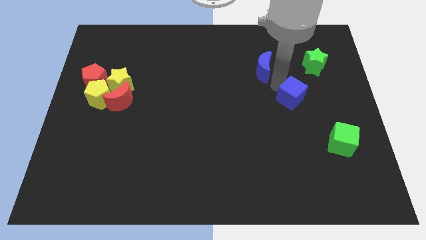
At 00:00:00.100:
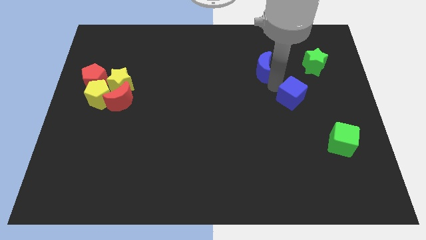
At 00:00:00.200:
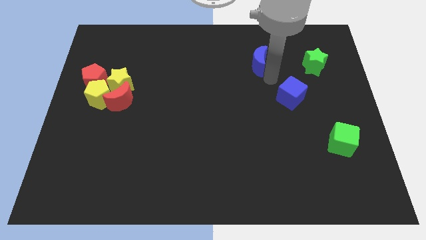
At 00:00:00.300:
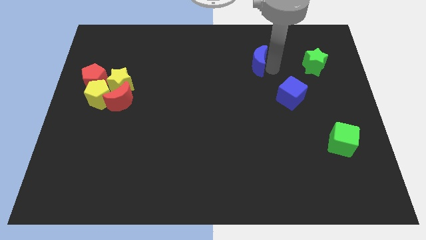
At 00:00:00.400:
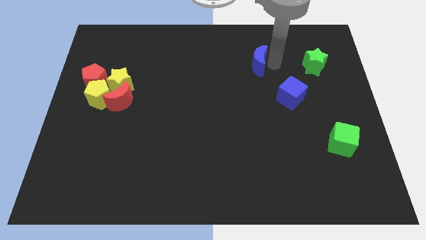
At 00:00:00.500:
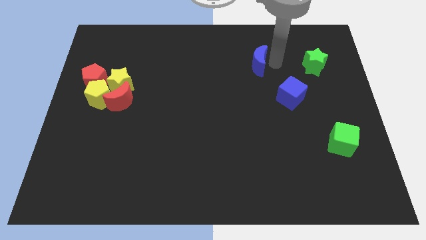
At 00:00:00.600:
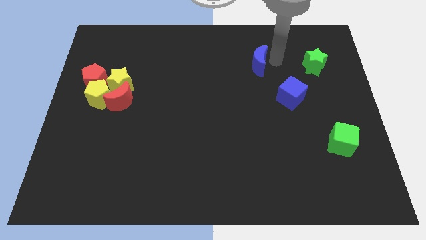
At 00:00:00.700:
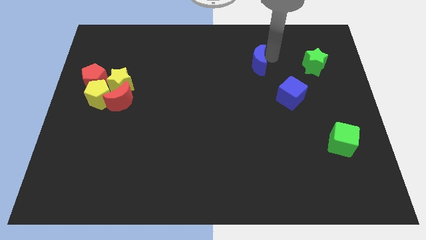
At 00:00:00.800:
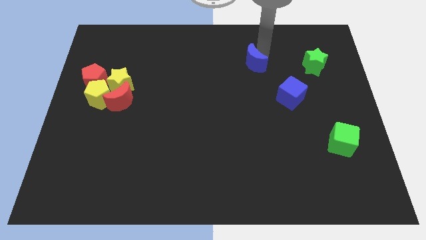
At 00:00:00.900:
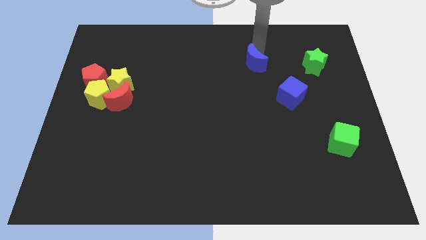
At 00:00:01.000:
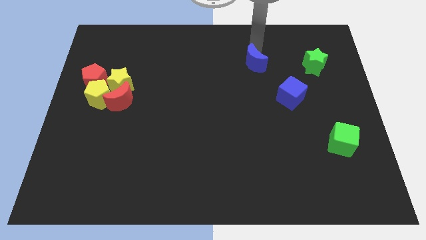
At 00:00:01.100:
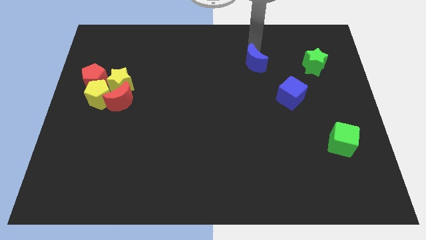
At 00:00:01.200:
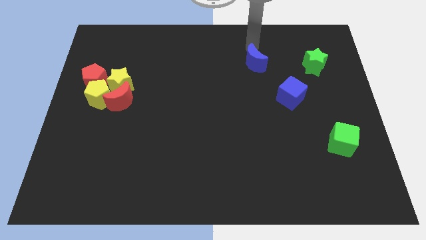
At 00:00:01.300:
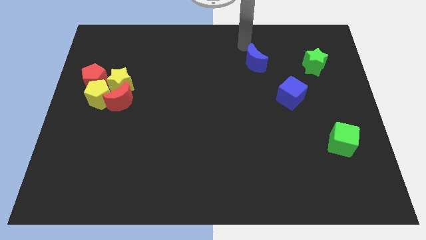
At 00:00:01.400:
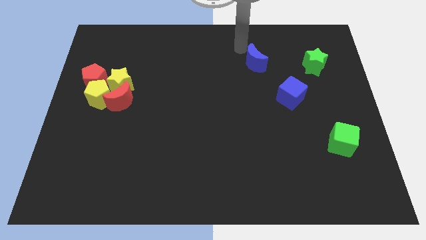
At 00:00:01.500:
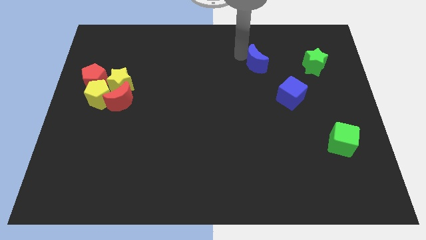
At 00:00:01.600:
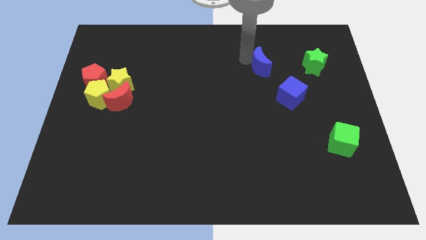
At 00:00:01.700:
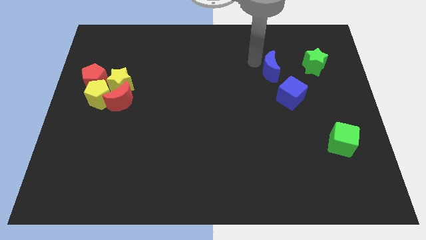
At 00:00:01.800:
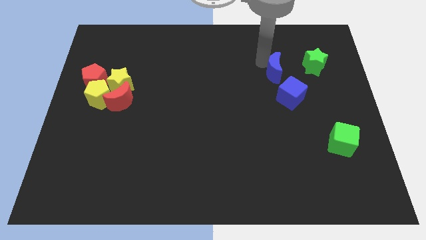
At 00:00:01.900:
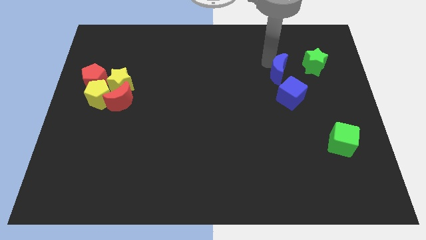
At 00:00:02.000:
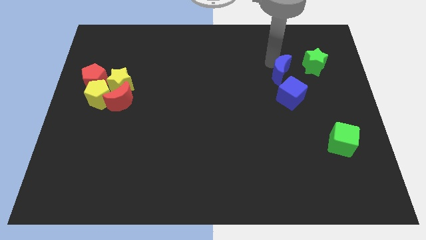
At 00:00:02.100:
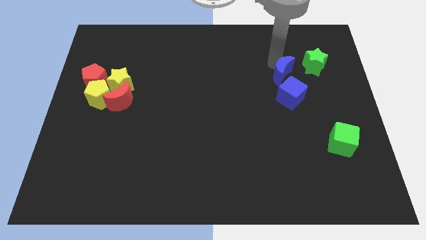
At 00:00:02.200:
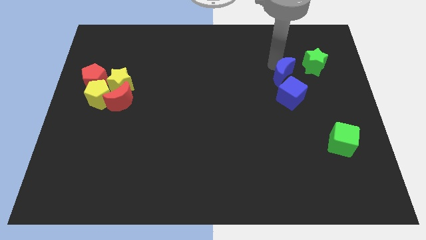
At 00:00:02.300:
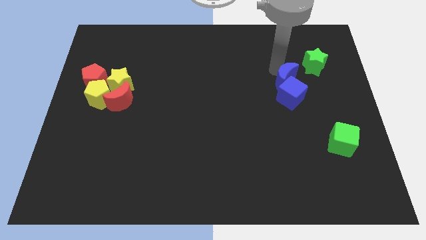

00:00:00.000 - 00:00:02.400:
move blue moon into the blue cube

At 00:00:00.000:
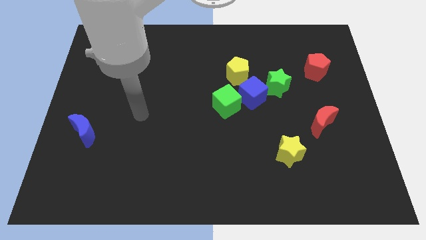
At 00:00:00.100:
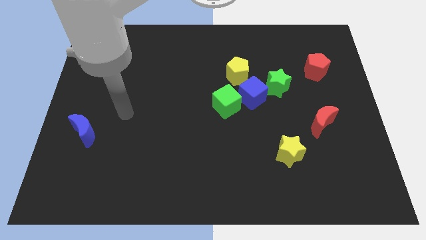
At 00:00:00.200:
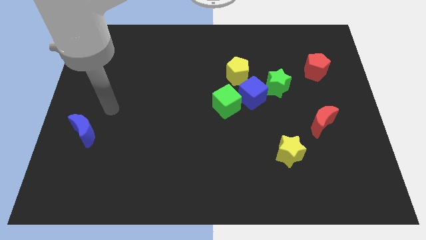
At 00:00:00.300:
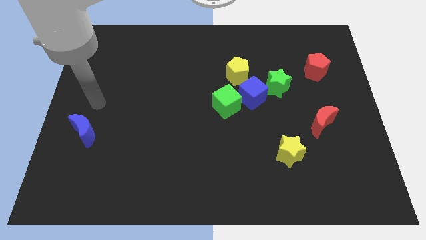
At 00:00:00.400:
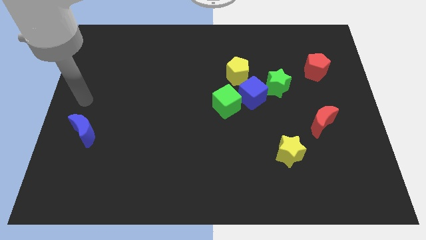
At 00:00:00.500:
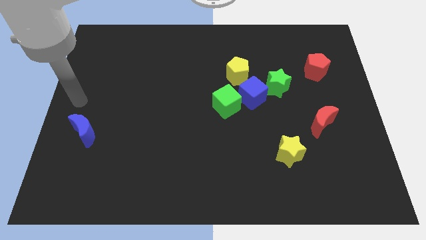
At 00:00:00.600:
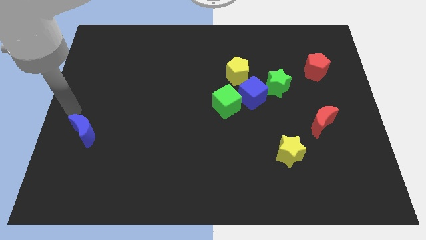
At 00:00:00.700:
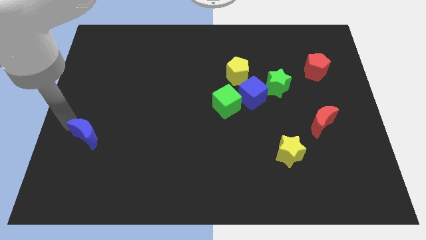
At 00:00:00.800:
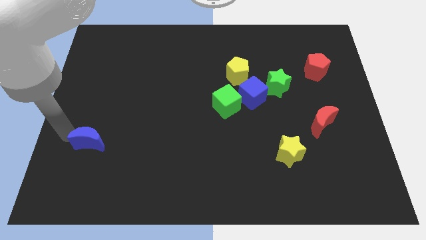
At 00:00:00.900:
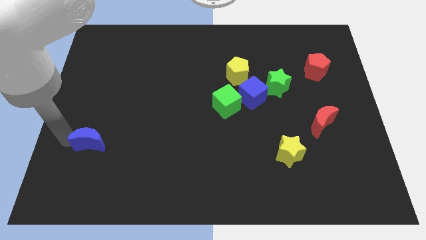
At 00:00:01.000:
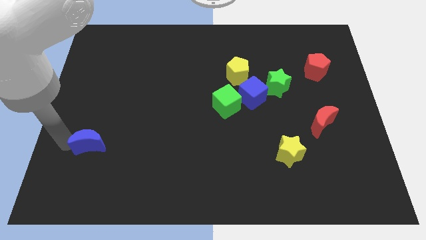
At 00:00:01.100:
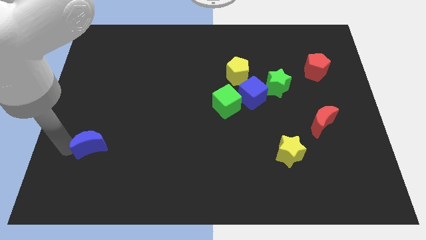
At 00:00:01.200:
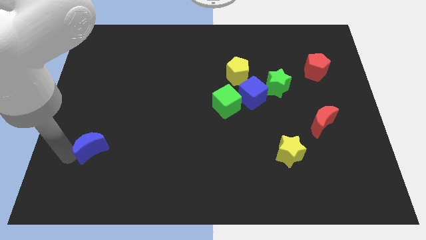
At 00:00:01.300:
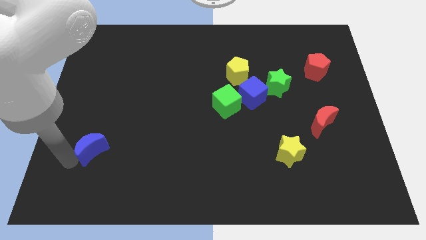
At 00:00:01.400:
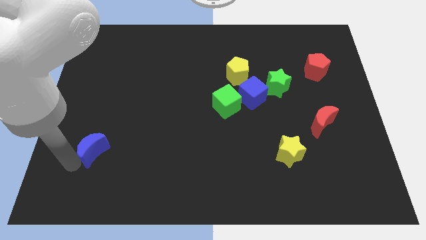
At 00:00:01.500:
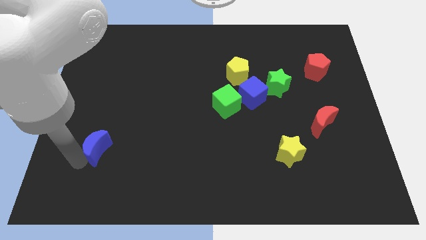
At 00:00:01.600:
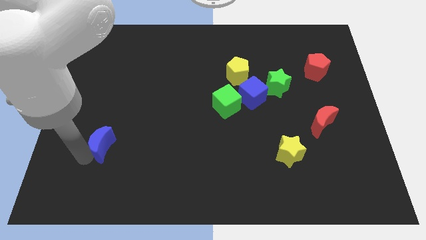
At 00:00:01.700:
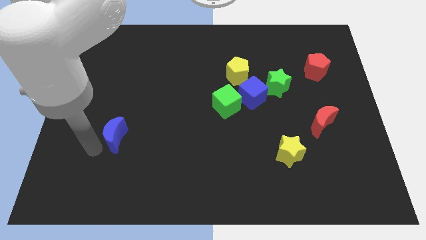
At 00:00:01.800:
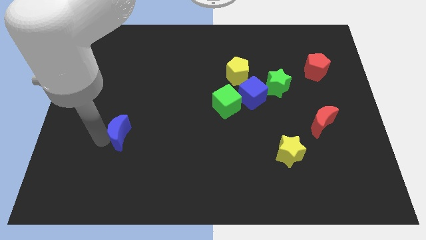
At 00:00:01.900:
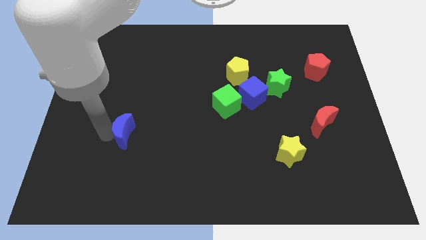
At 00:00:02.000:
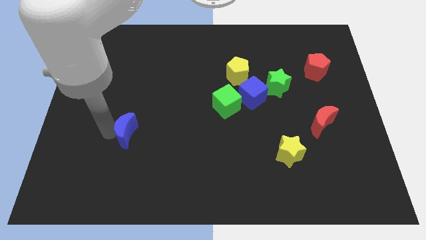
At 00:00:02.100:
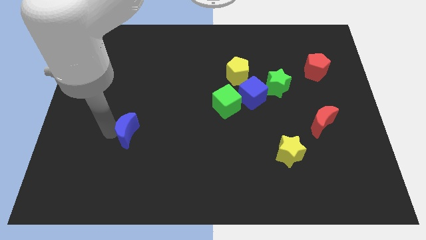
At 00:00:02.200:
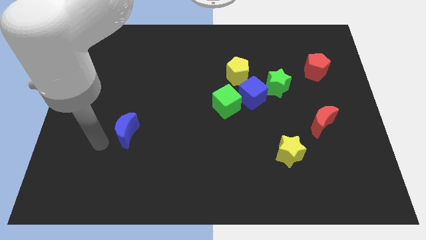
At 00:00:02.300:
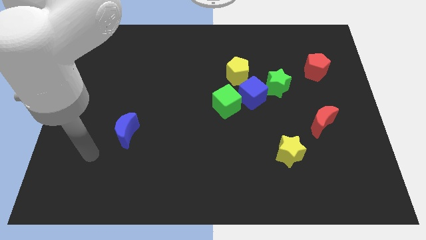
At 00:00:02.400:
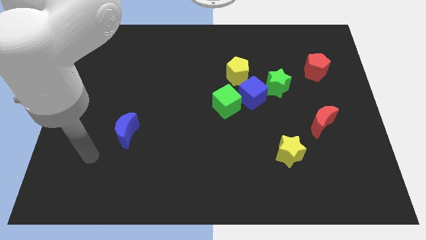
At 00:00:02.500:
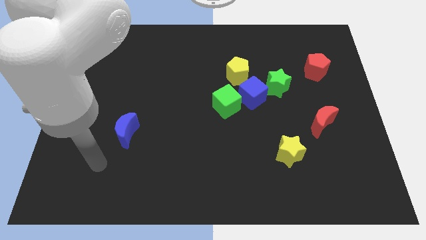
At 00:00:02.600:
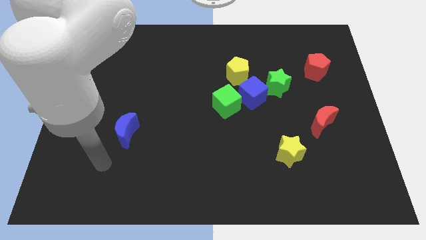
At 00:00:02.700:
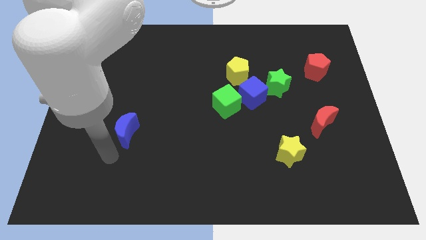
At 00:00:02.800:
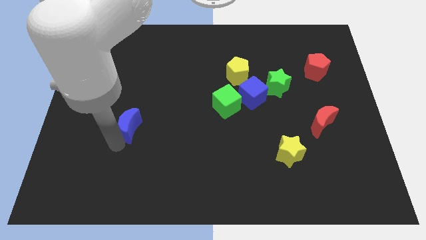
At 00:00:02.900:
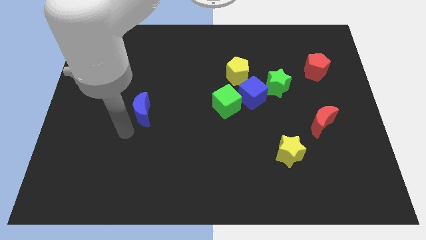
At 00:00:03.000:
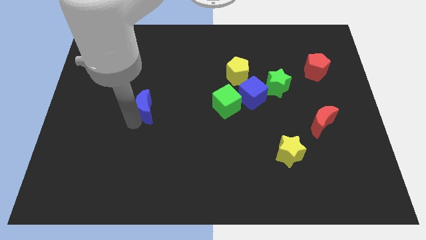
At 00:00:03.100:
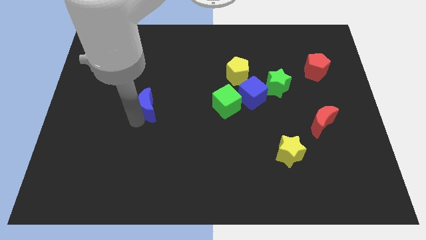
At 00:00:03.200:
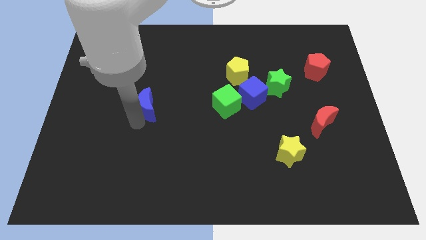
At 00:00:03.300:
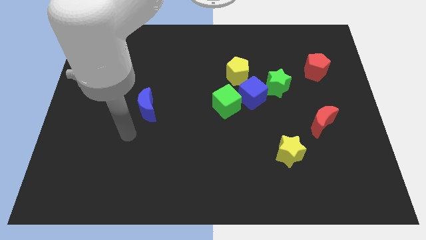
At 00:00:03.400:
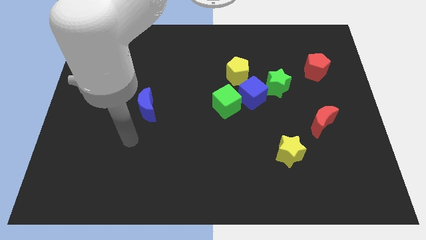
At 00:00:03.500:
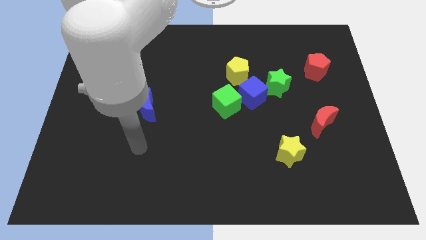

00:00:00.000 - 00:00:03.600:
place the blue crescent to the left of the green cube

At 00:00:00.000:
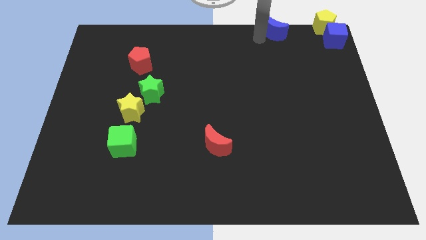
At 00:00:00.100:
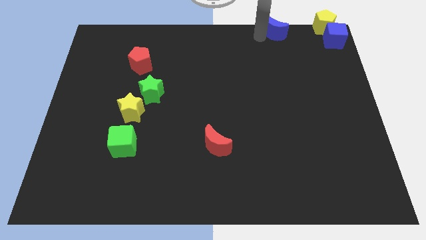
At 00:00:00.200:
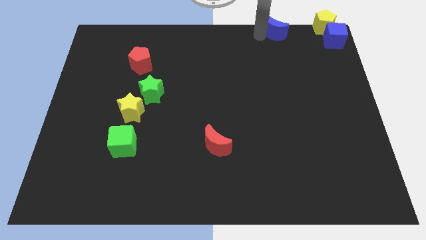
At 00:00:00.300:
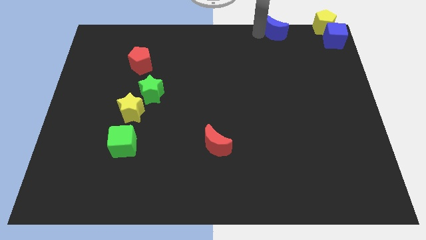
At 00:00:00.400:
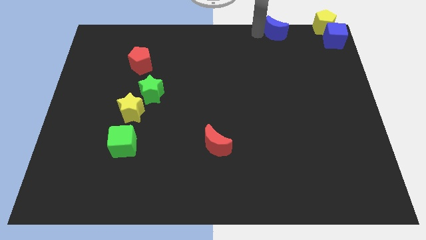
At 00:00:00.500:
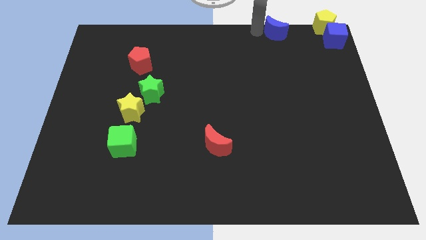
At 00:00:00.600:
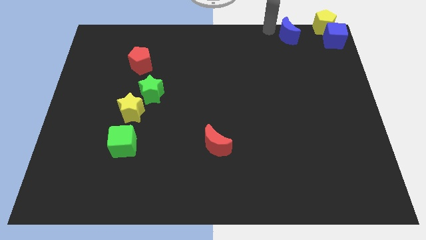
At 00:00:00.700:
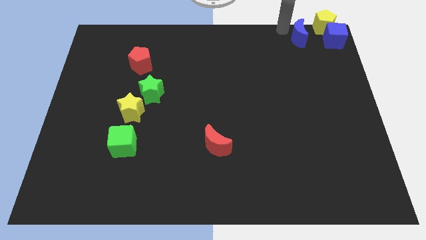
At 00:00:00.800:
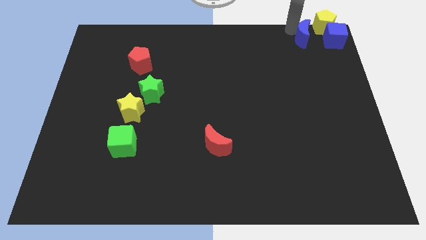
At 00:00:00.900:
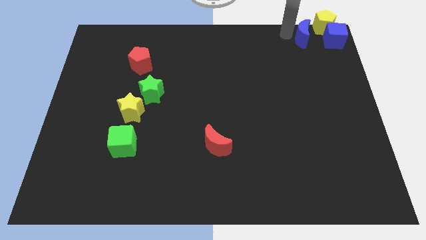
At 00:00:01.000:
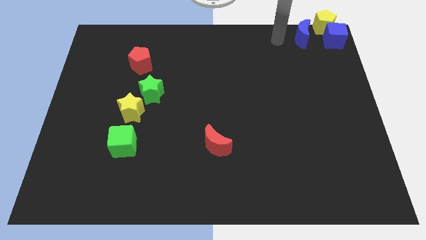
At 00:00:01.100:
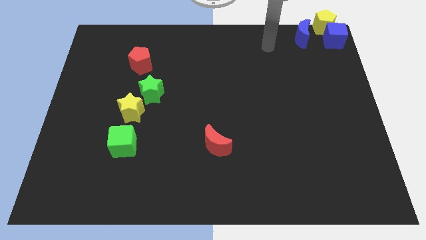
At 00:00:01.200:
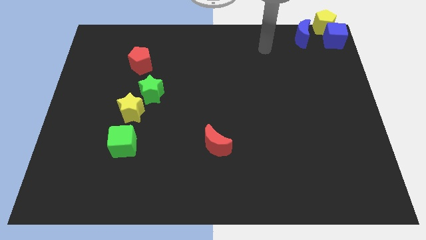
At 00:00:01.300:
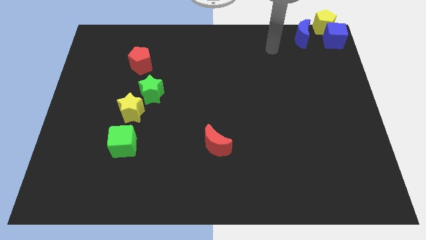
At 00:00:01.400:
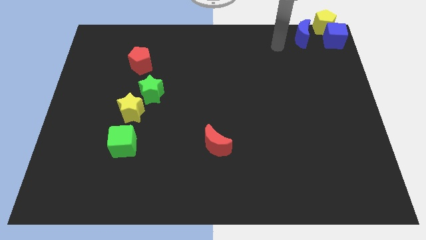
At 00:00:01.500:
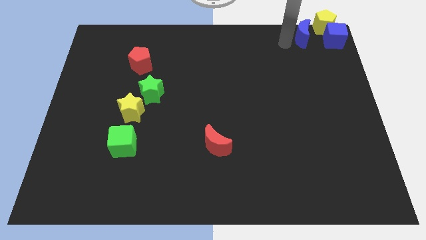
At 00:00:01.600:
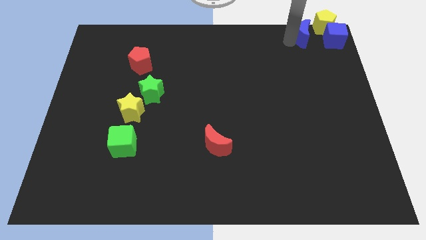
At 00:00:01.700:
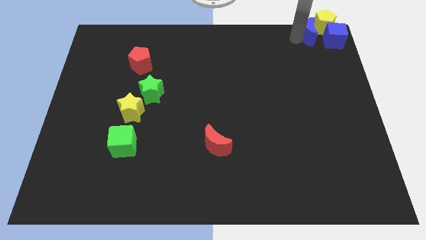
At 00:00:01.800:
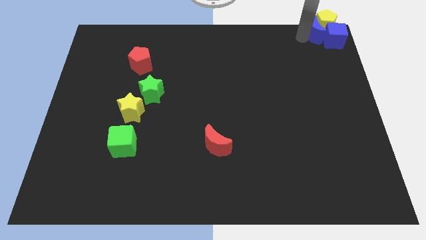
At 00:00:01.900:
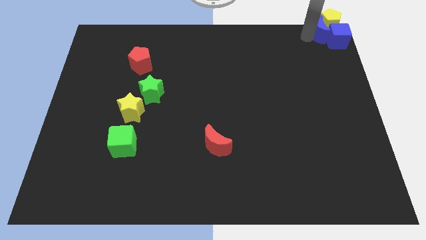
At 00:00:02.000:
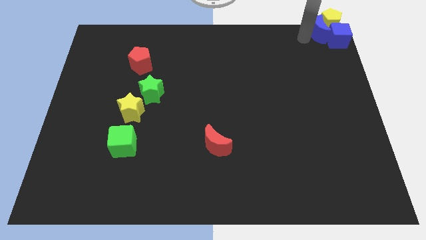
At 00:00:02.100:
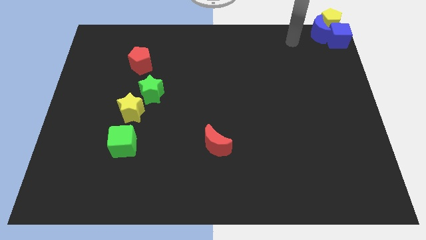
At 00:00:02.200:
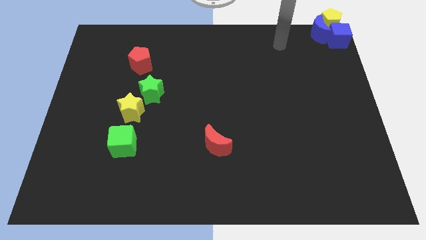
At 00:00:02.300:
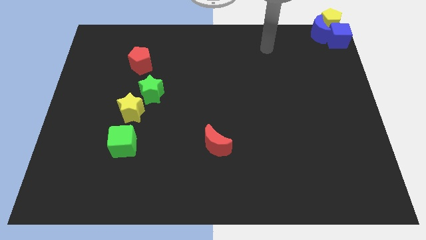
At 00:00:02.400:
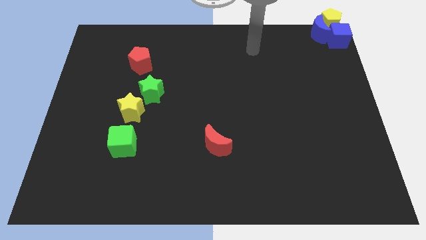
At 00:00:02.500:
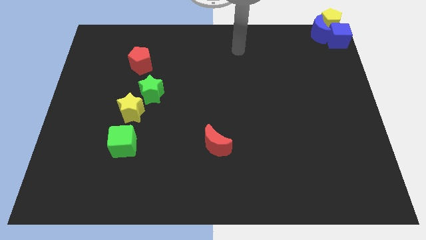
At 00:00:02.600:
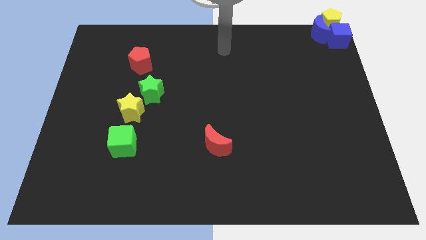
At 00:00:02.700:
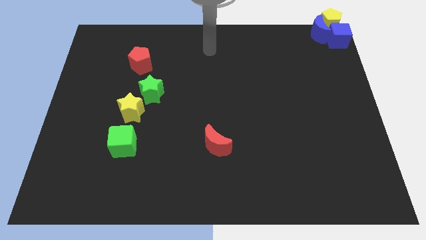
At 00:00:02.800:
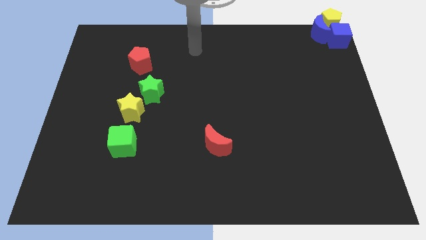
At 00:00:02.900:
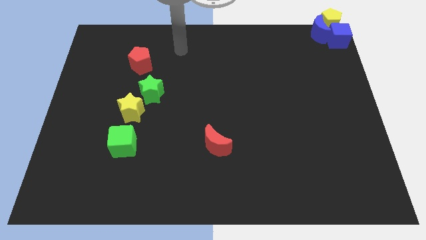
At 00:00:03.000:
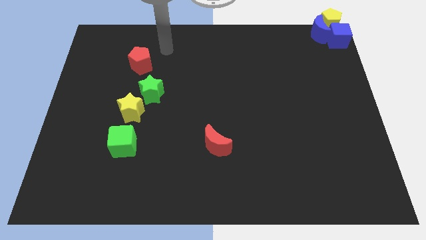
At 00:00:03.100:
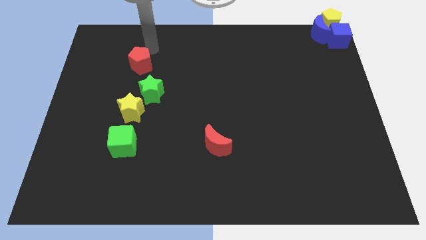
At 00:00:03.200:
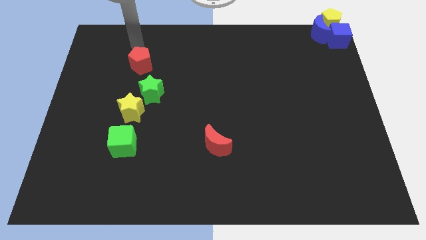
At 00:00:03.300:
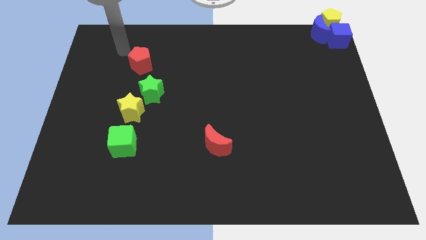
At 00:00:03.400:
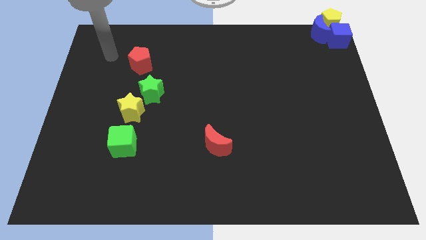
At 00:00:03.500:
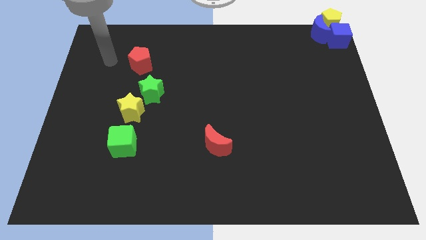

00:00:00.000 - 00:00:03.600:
move the blue moon into the group of blocks
